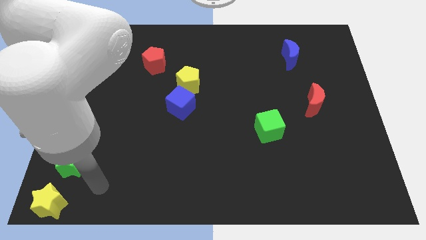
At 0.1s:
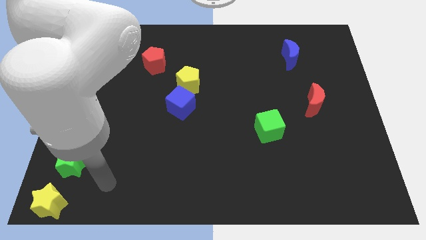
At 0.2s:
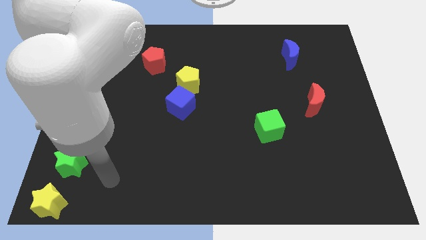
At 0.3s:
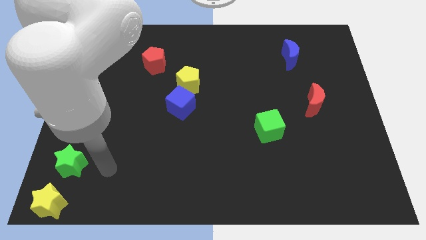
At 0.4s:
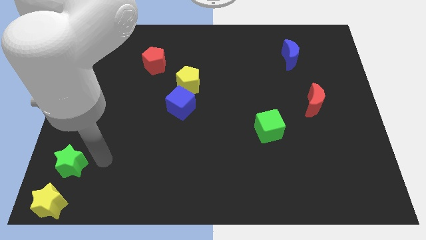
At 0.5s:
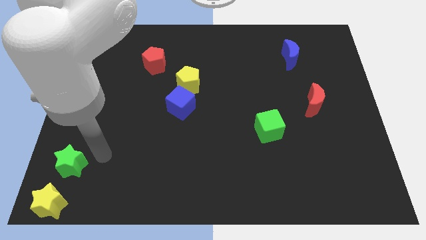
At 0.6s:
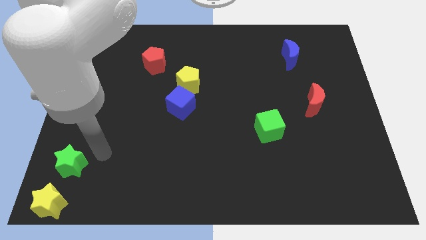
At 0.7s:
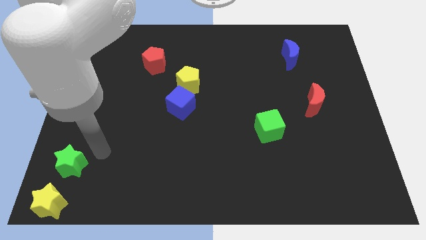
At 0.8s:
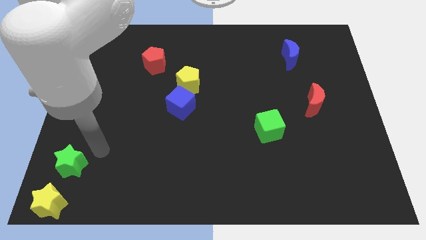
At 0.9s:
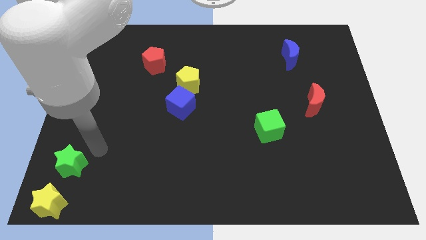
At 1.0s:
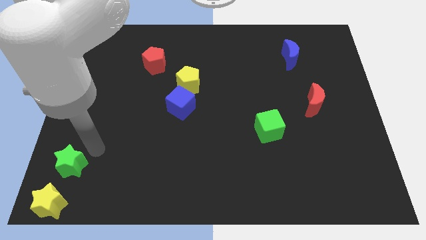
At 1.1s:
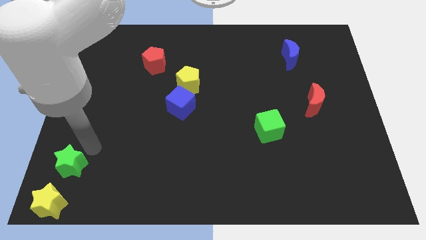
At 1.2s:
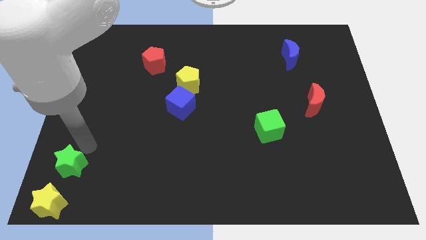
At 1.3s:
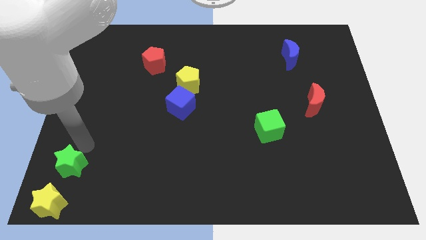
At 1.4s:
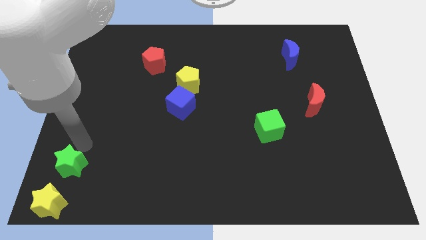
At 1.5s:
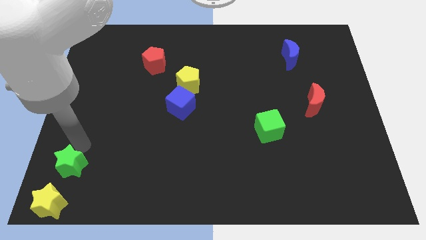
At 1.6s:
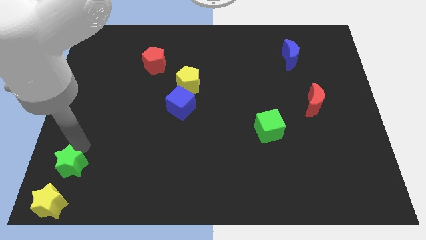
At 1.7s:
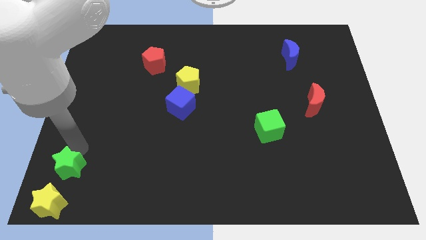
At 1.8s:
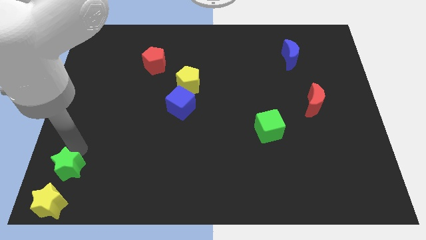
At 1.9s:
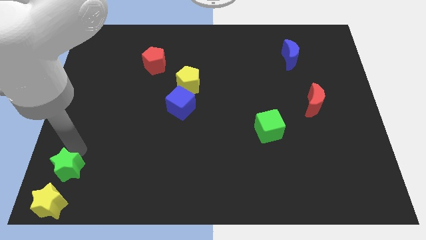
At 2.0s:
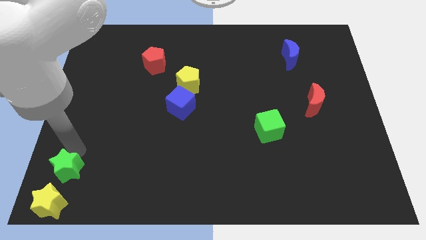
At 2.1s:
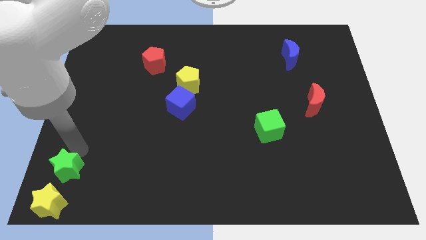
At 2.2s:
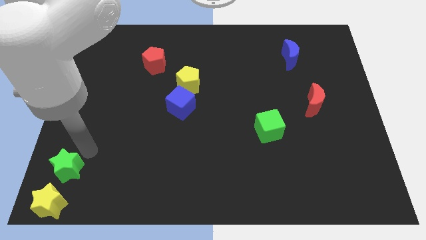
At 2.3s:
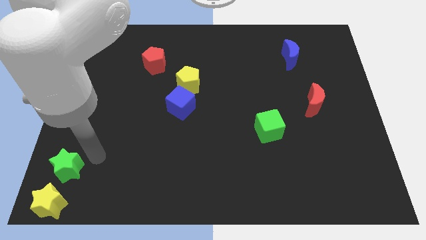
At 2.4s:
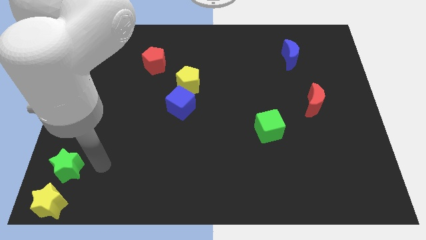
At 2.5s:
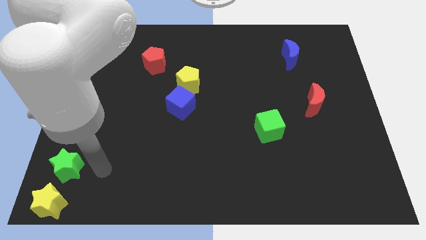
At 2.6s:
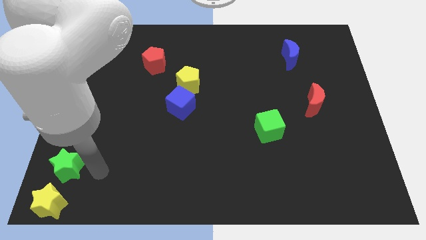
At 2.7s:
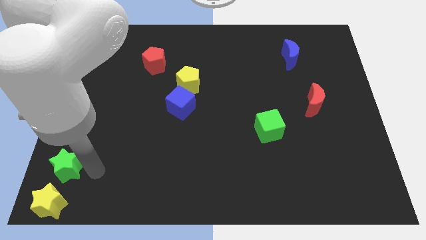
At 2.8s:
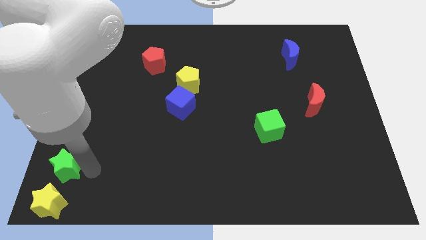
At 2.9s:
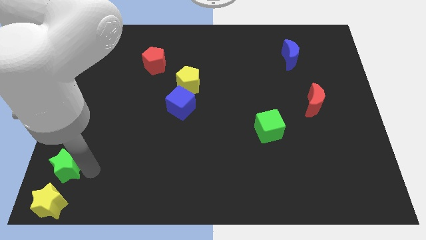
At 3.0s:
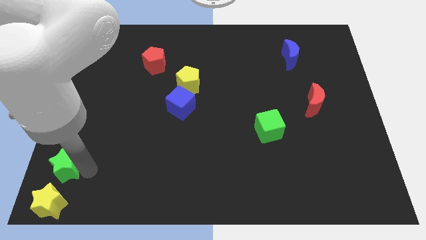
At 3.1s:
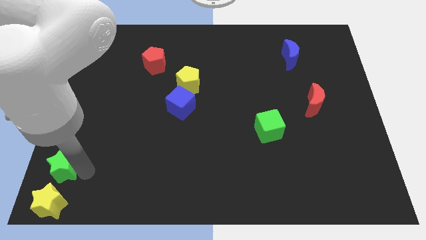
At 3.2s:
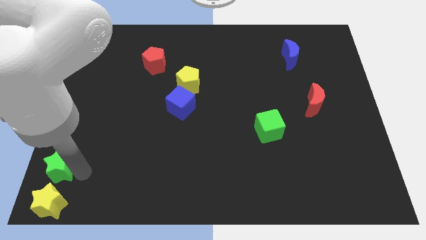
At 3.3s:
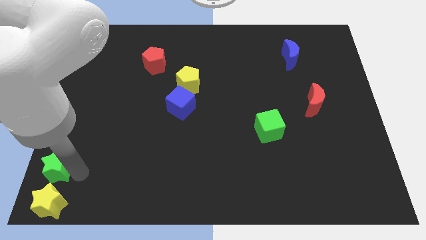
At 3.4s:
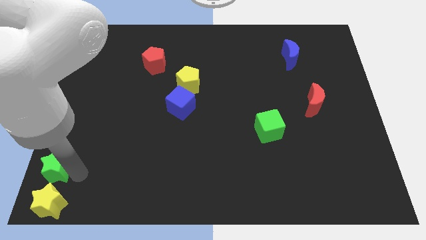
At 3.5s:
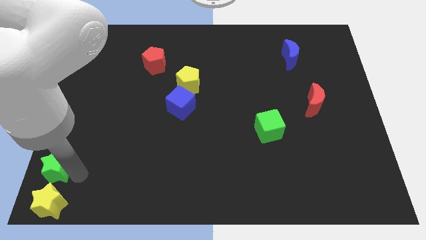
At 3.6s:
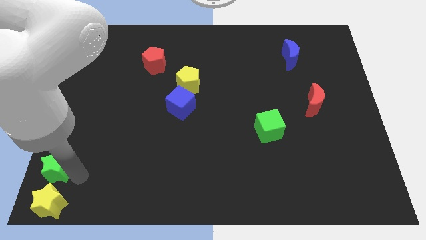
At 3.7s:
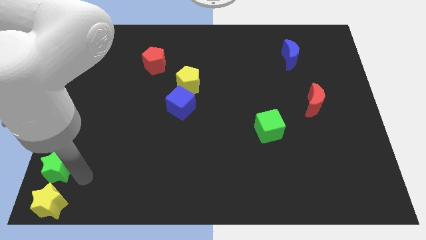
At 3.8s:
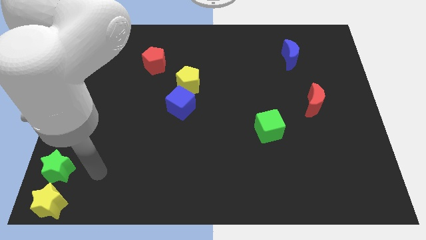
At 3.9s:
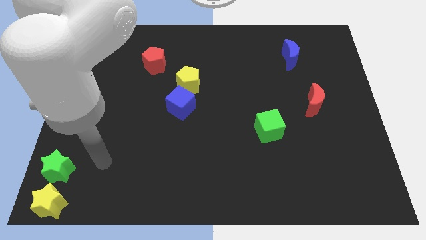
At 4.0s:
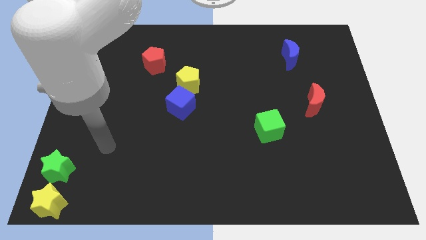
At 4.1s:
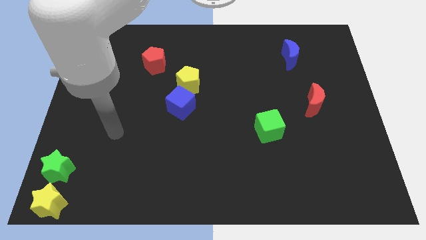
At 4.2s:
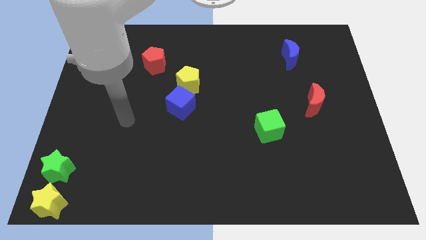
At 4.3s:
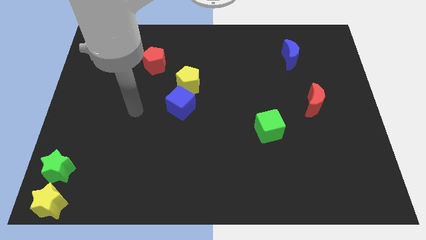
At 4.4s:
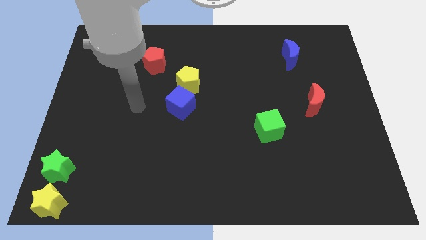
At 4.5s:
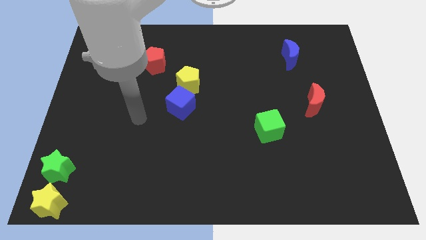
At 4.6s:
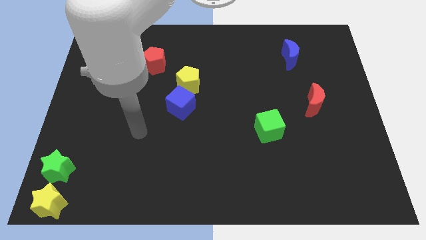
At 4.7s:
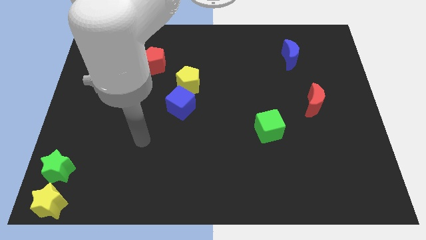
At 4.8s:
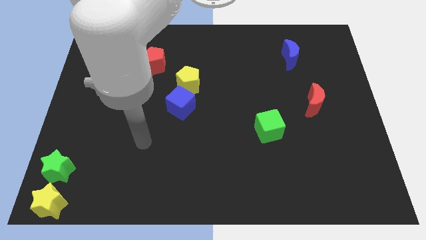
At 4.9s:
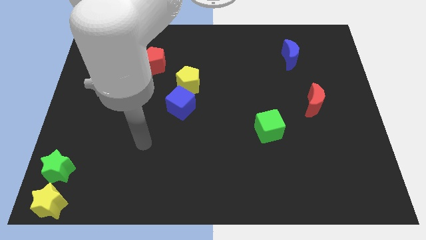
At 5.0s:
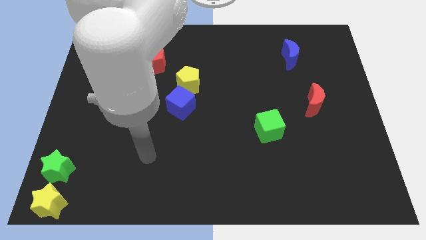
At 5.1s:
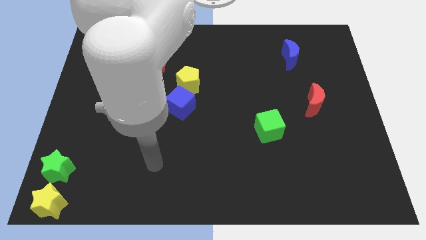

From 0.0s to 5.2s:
push the green star slightly to the left

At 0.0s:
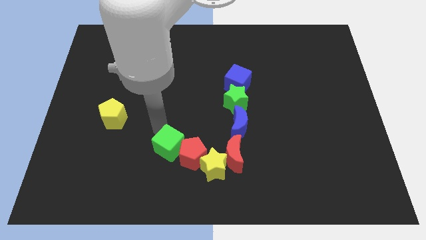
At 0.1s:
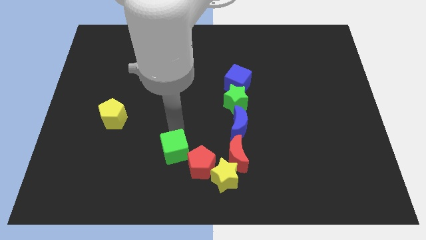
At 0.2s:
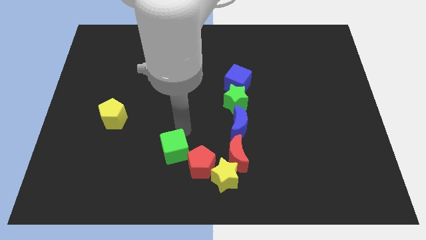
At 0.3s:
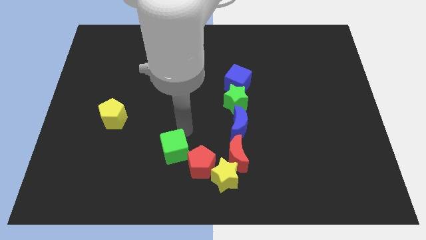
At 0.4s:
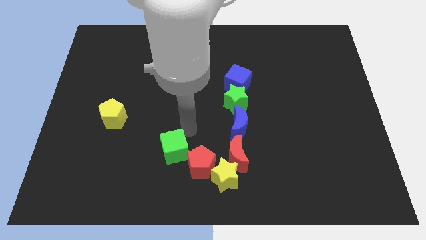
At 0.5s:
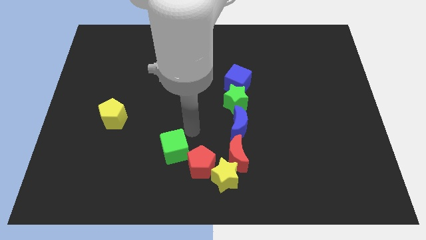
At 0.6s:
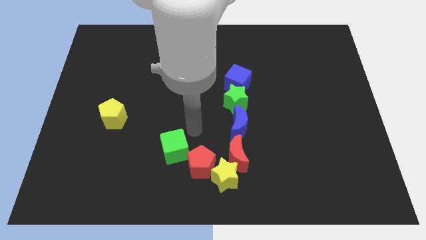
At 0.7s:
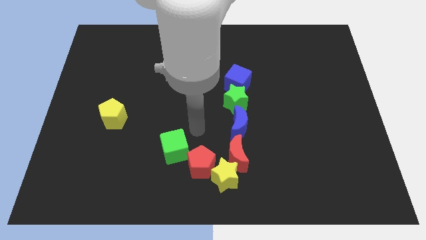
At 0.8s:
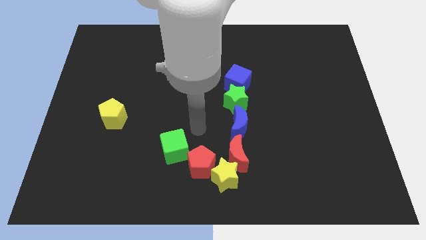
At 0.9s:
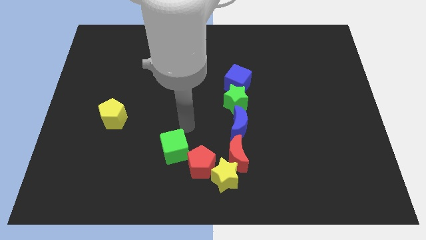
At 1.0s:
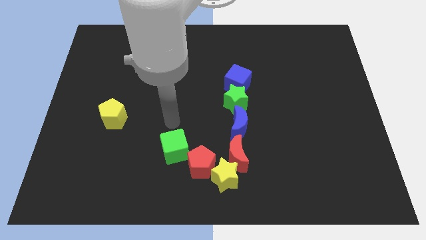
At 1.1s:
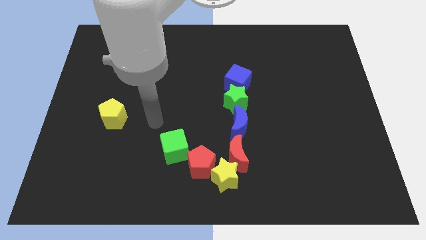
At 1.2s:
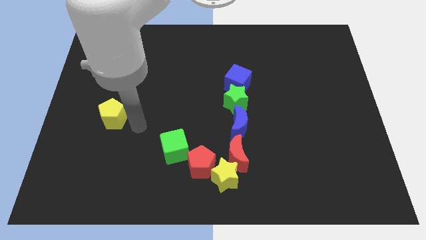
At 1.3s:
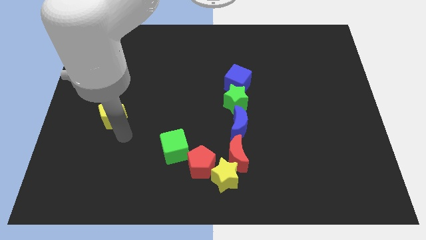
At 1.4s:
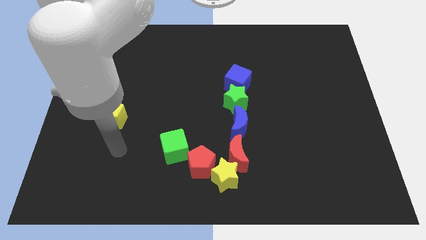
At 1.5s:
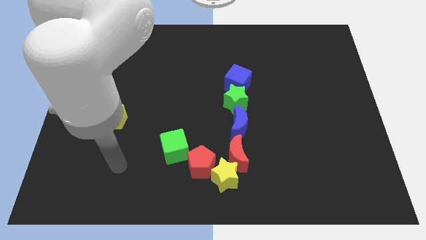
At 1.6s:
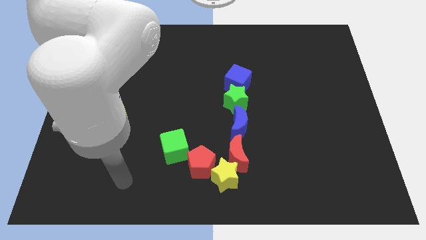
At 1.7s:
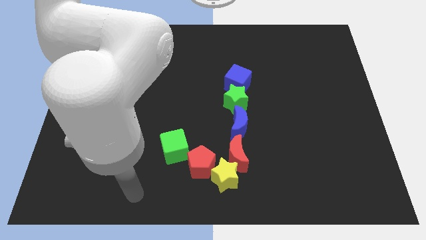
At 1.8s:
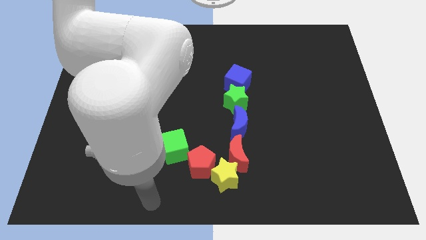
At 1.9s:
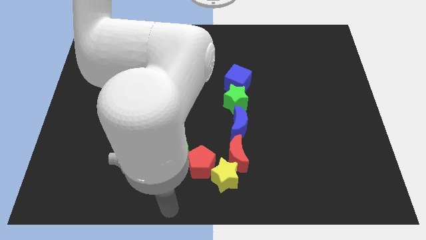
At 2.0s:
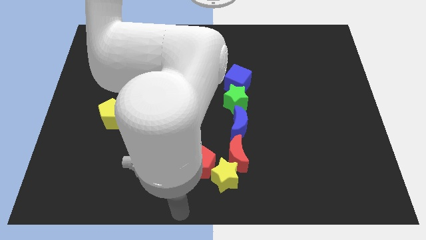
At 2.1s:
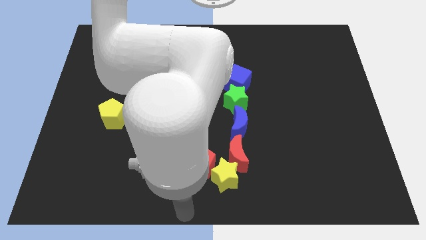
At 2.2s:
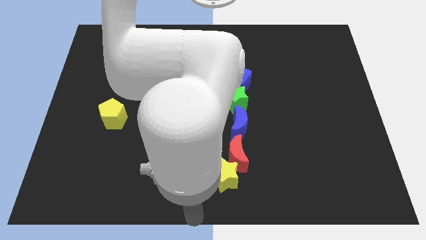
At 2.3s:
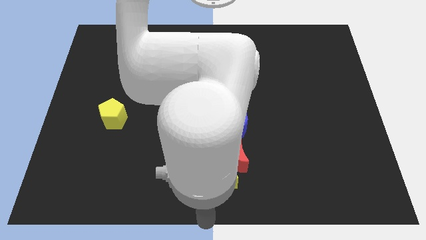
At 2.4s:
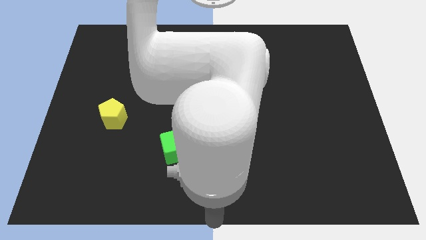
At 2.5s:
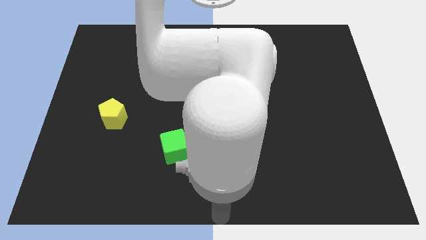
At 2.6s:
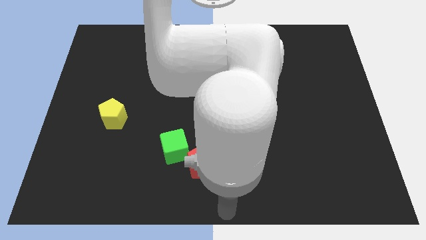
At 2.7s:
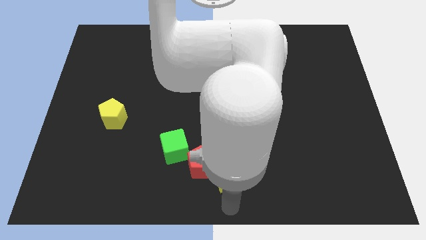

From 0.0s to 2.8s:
place your arm at the bottom center of the board

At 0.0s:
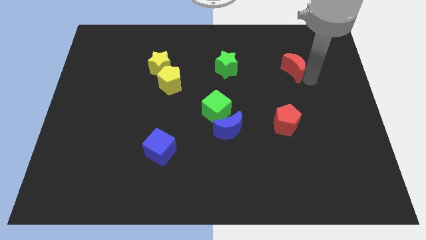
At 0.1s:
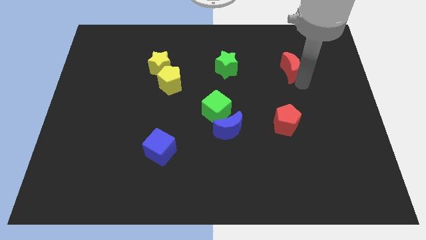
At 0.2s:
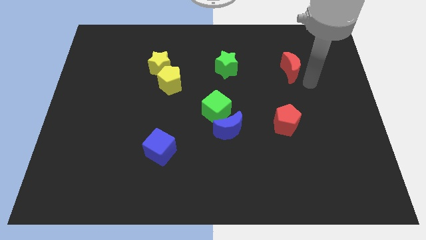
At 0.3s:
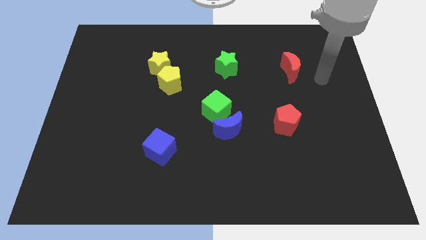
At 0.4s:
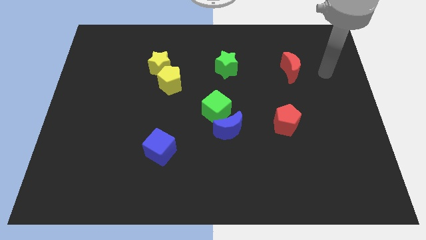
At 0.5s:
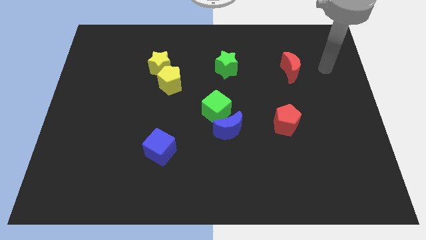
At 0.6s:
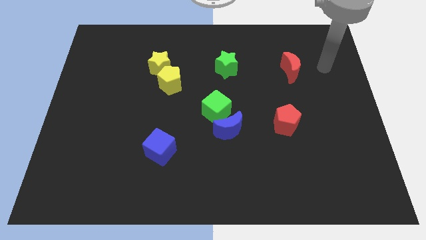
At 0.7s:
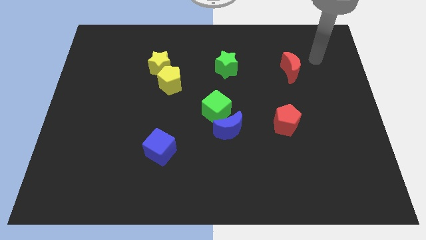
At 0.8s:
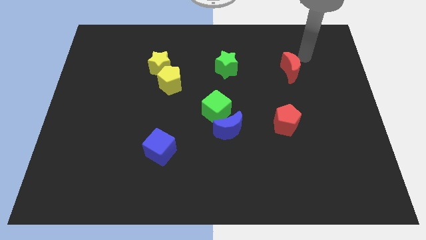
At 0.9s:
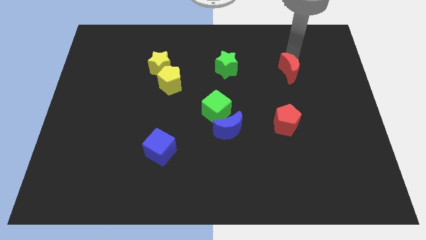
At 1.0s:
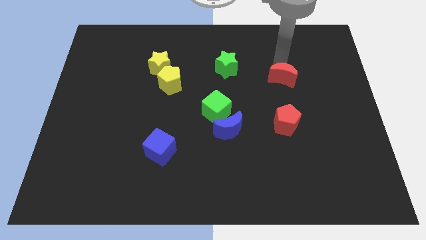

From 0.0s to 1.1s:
move red moon above red pentagon
